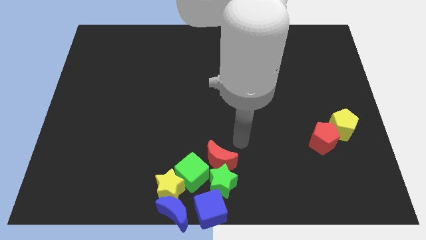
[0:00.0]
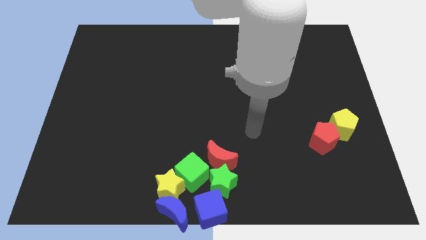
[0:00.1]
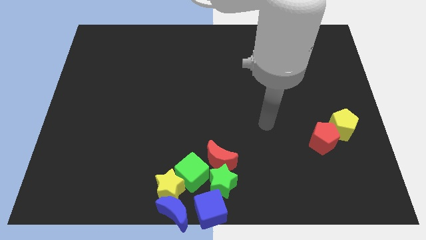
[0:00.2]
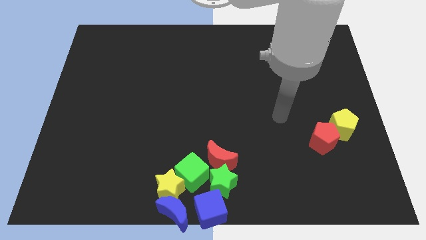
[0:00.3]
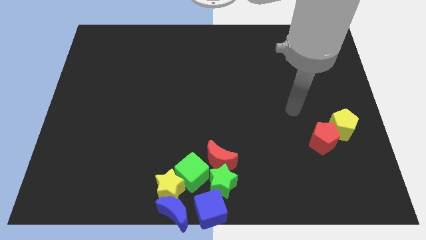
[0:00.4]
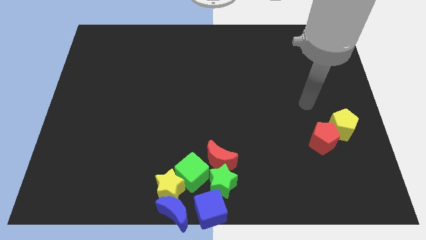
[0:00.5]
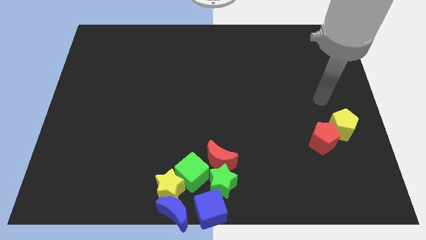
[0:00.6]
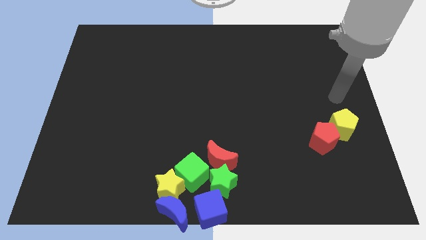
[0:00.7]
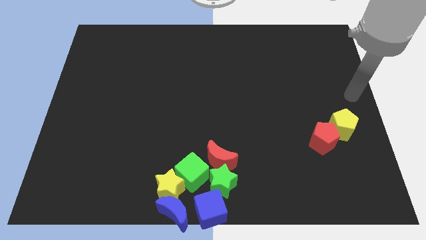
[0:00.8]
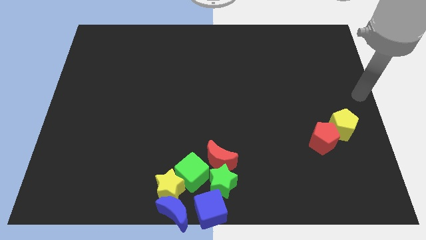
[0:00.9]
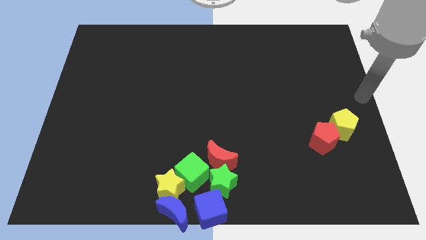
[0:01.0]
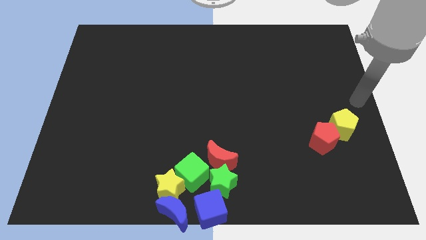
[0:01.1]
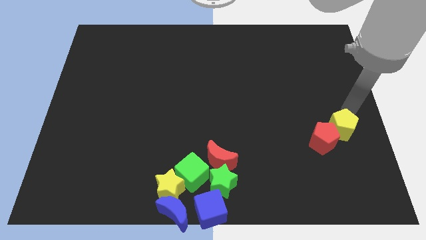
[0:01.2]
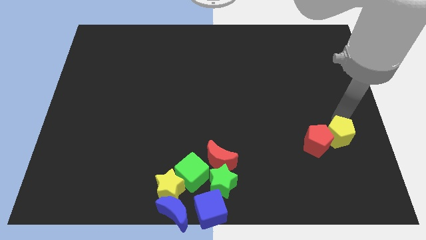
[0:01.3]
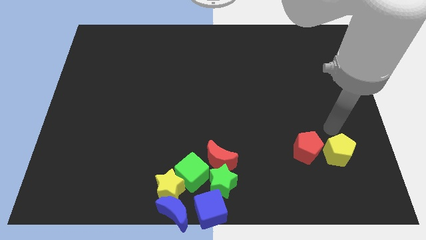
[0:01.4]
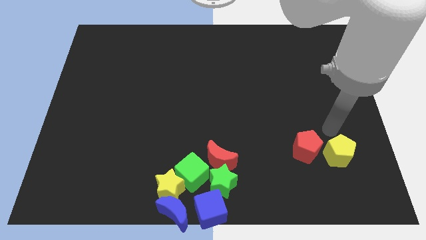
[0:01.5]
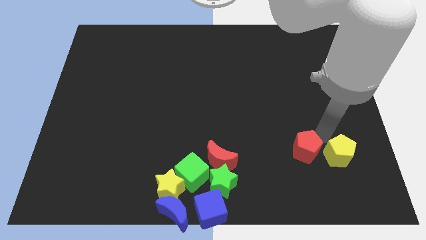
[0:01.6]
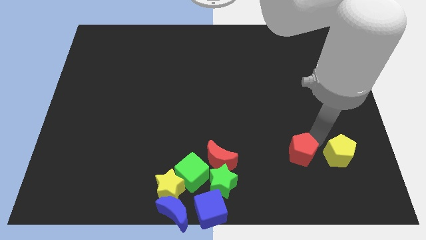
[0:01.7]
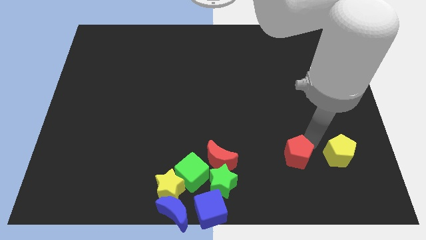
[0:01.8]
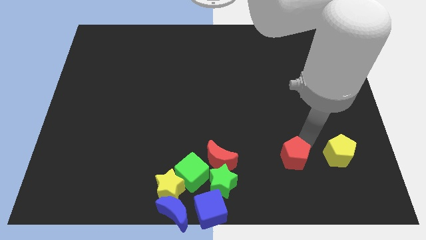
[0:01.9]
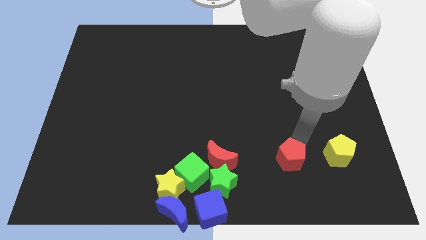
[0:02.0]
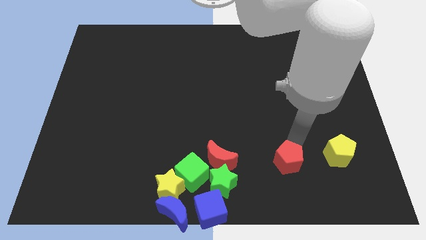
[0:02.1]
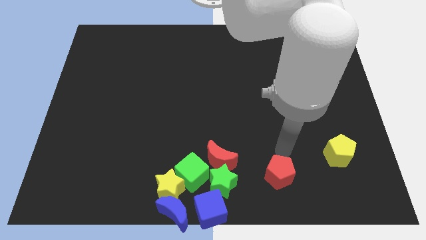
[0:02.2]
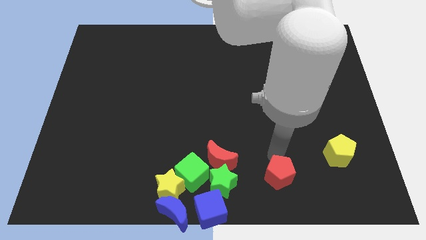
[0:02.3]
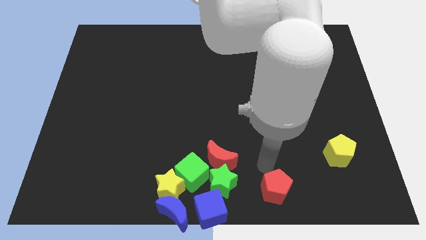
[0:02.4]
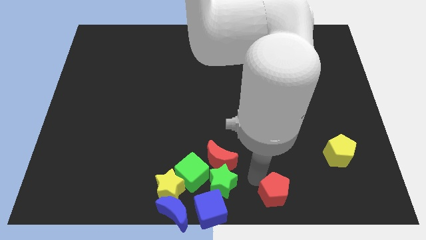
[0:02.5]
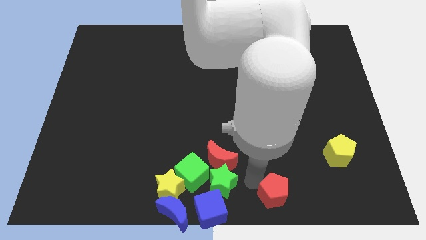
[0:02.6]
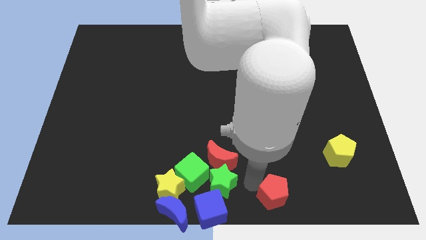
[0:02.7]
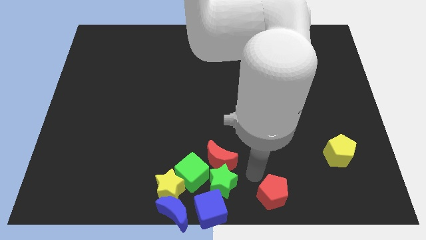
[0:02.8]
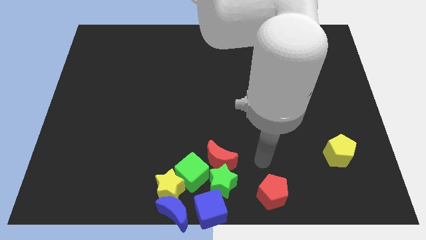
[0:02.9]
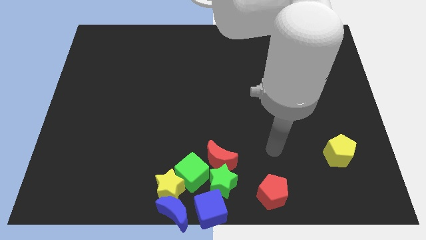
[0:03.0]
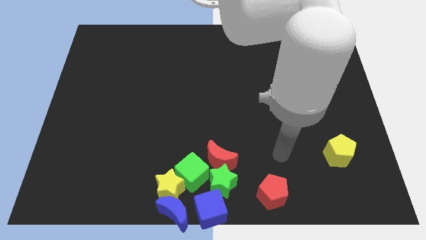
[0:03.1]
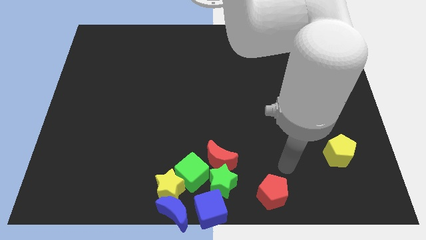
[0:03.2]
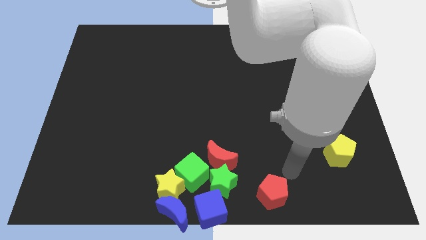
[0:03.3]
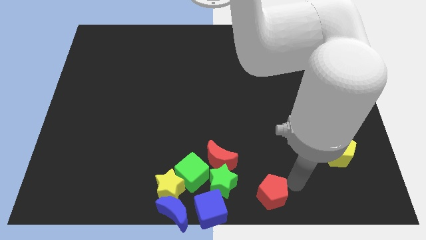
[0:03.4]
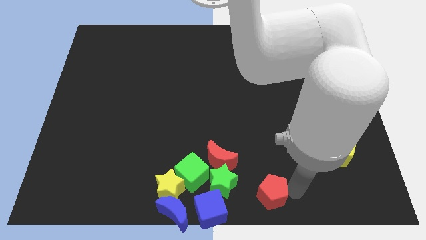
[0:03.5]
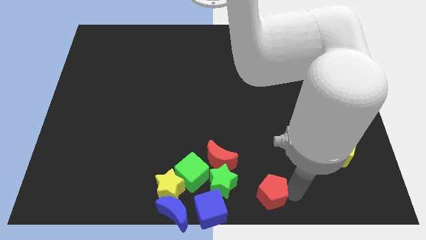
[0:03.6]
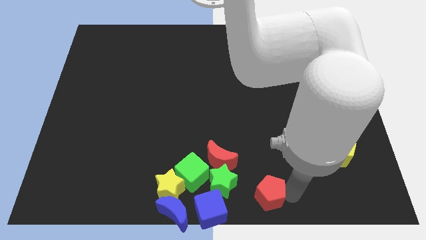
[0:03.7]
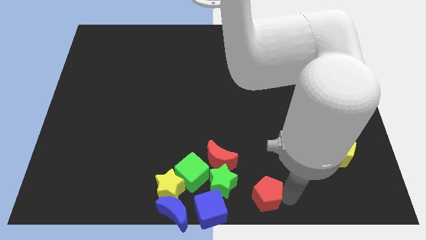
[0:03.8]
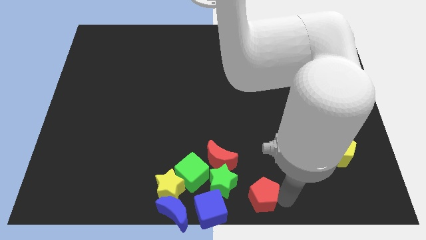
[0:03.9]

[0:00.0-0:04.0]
move the red pentagon to the bottom center of the board

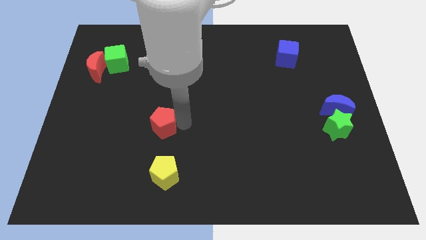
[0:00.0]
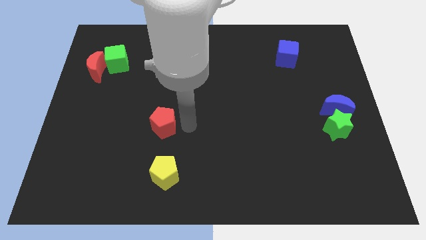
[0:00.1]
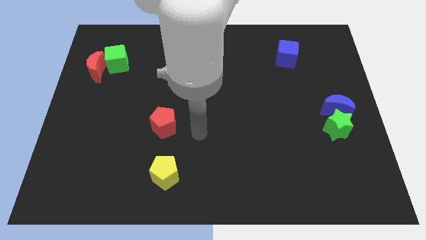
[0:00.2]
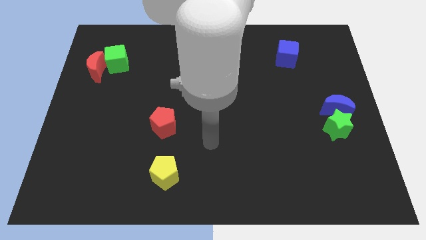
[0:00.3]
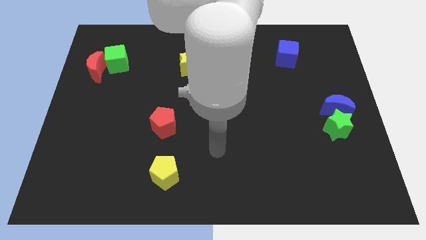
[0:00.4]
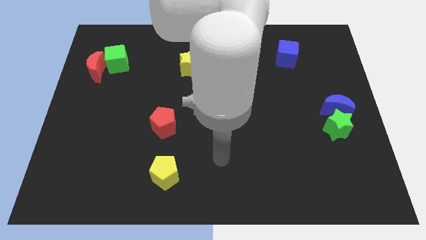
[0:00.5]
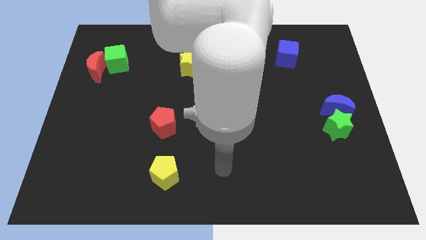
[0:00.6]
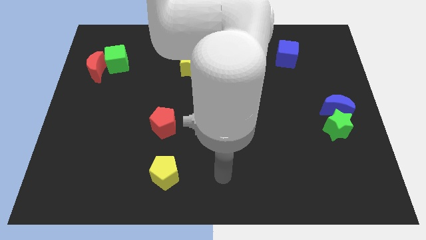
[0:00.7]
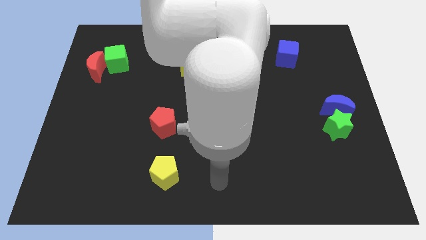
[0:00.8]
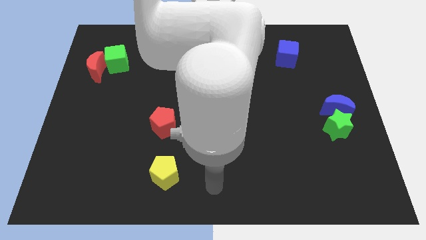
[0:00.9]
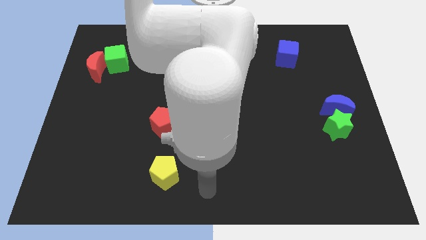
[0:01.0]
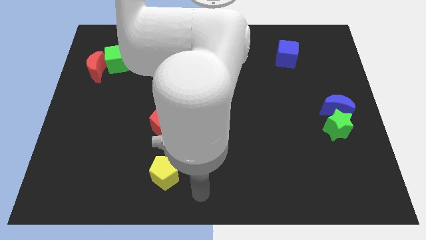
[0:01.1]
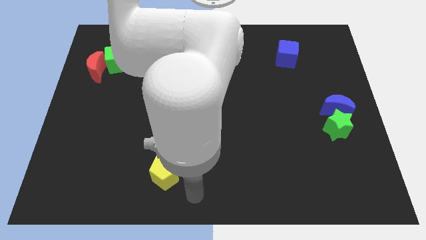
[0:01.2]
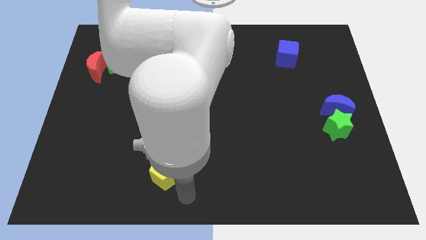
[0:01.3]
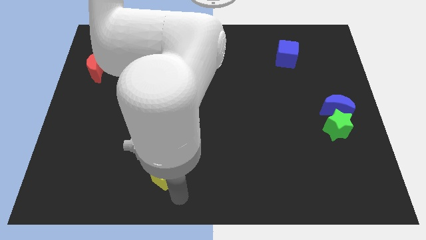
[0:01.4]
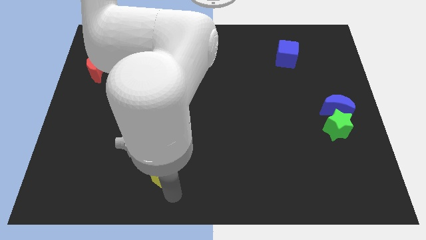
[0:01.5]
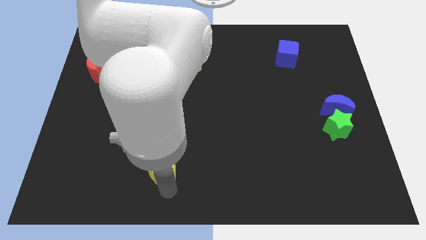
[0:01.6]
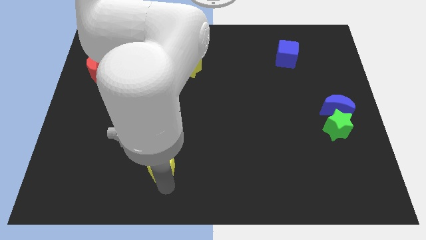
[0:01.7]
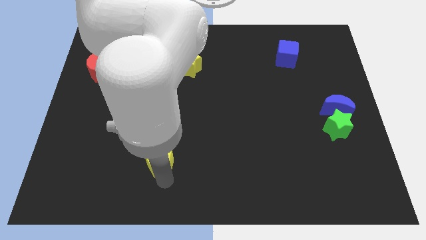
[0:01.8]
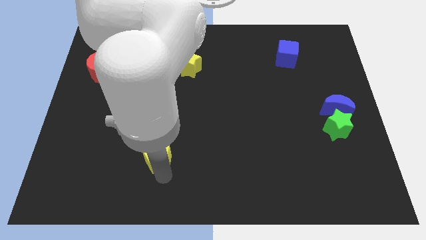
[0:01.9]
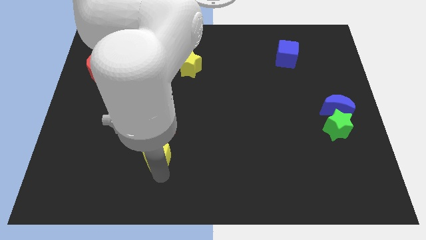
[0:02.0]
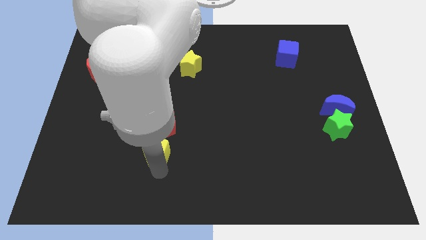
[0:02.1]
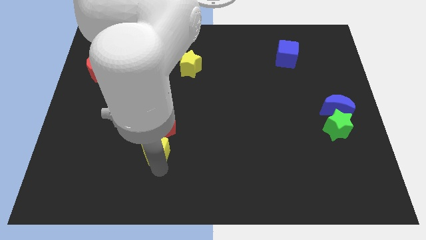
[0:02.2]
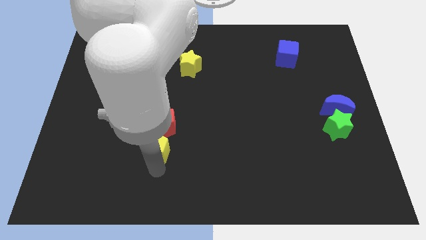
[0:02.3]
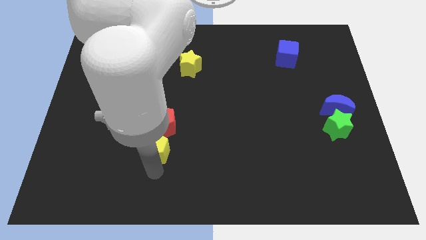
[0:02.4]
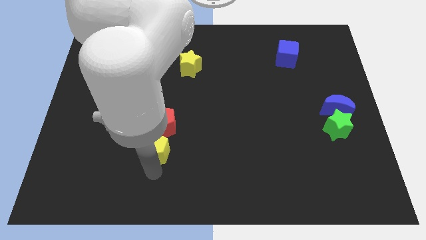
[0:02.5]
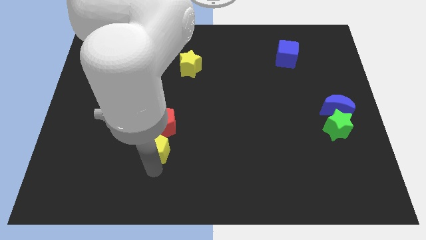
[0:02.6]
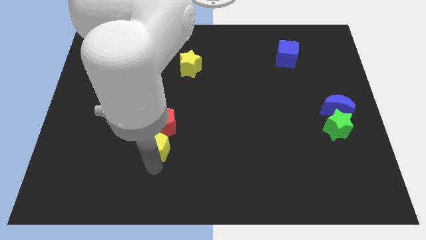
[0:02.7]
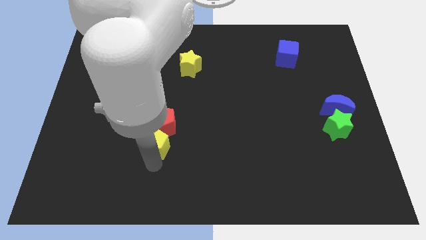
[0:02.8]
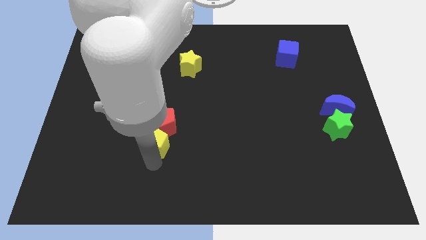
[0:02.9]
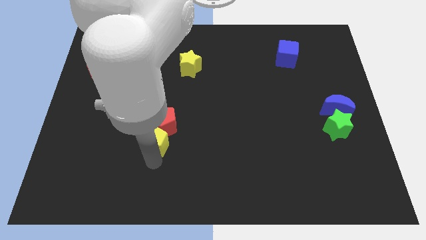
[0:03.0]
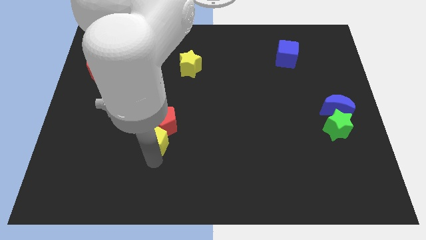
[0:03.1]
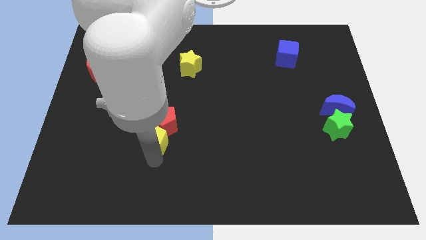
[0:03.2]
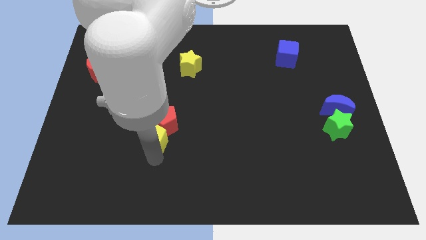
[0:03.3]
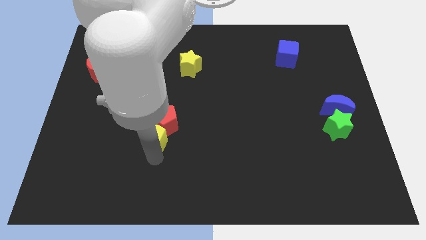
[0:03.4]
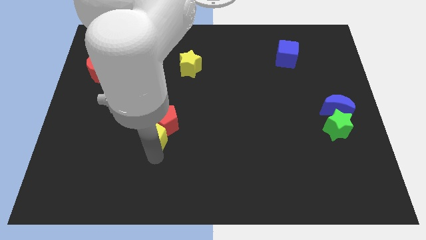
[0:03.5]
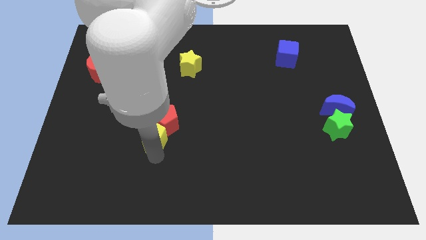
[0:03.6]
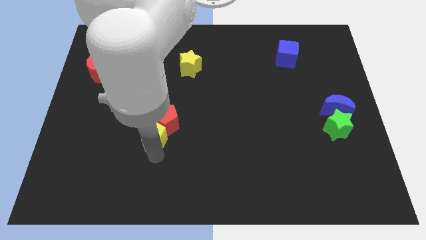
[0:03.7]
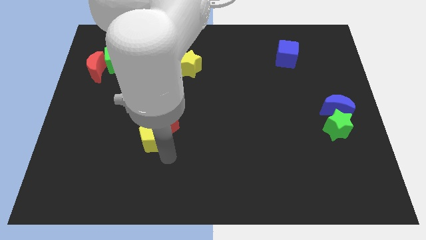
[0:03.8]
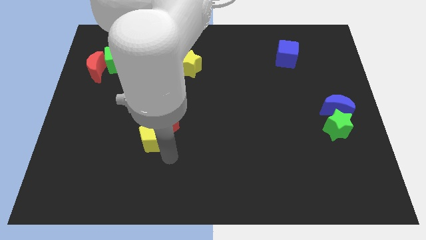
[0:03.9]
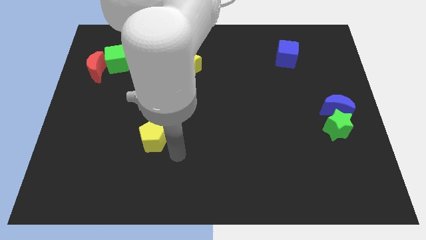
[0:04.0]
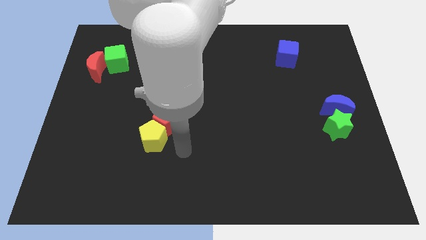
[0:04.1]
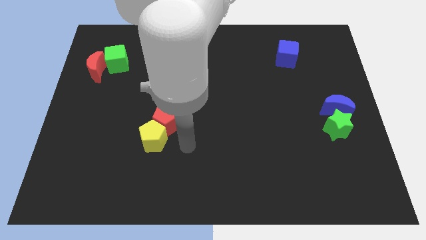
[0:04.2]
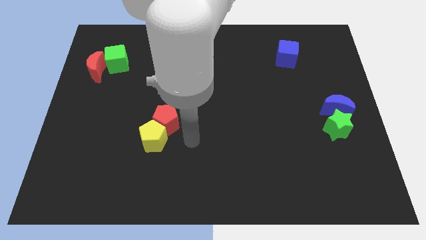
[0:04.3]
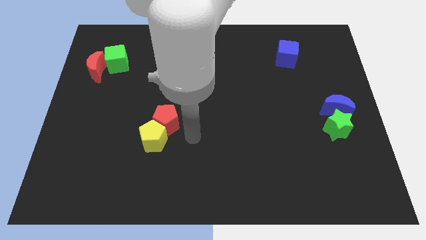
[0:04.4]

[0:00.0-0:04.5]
put the yellow pentagon into the red pentagon

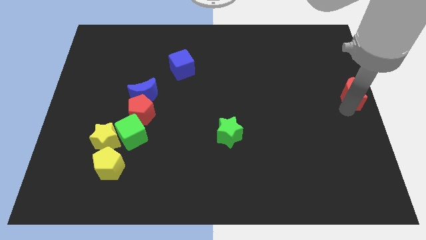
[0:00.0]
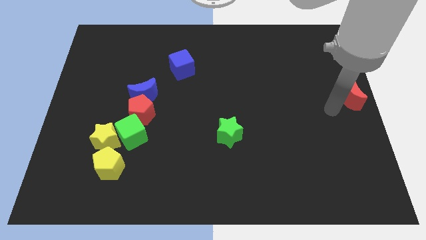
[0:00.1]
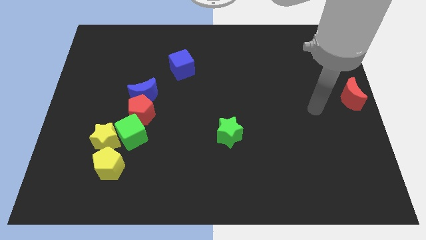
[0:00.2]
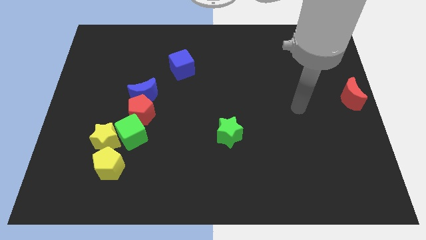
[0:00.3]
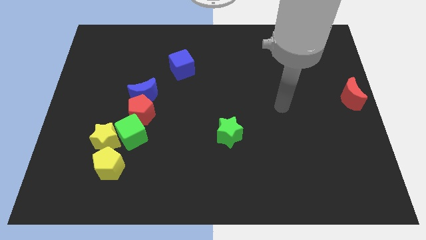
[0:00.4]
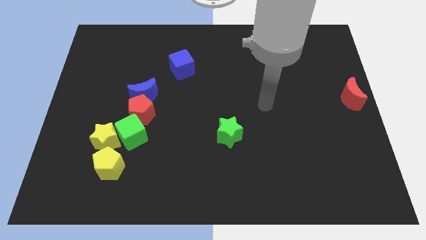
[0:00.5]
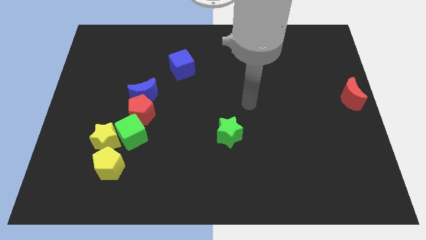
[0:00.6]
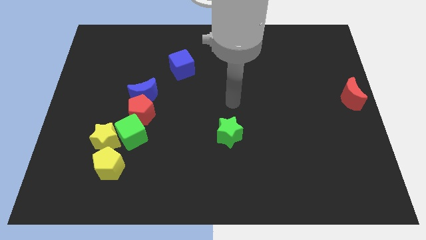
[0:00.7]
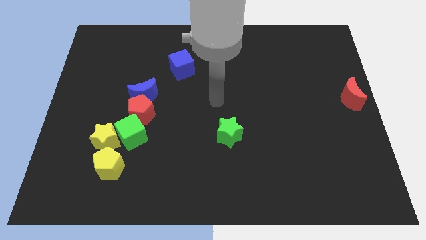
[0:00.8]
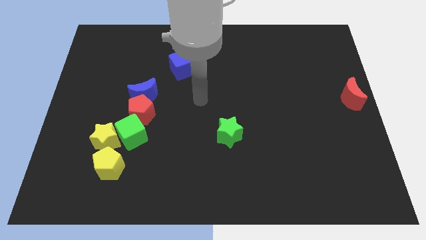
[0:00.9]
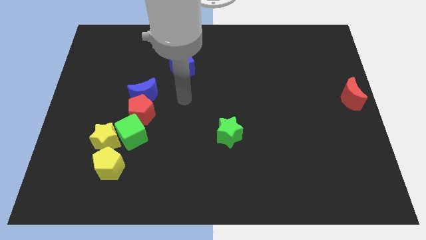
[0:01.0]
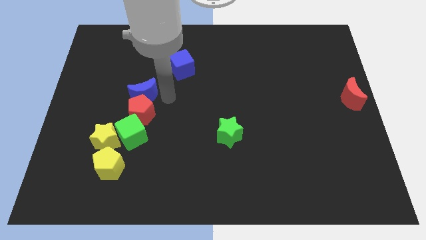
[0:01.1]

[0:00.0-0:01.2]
move the arm away from the red moon
